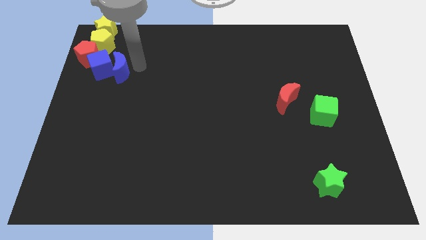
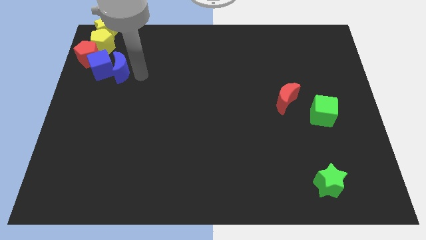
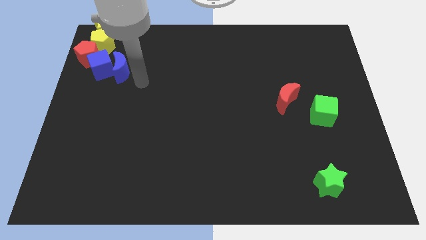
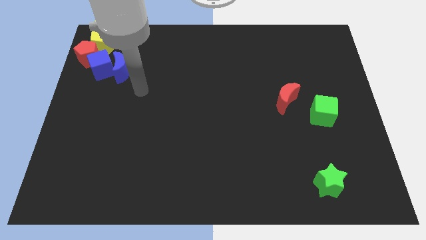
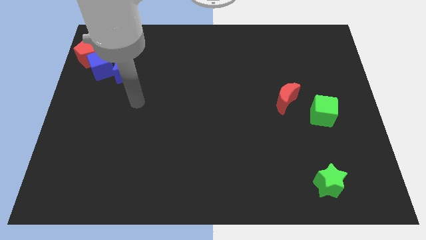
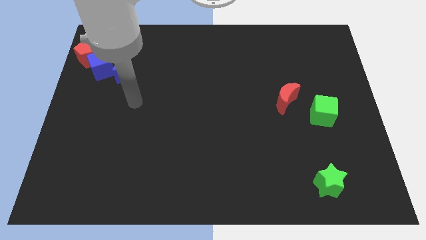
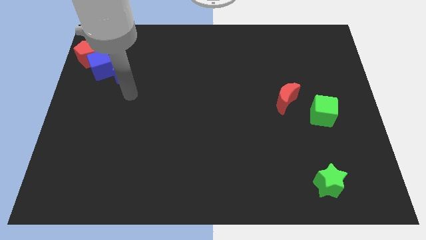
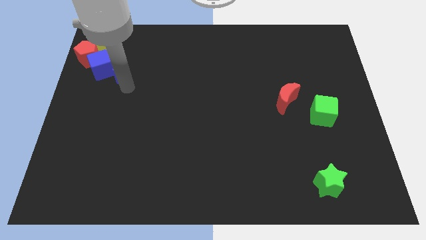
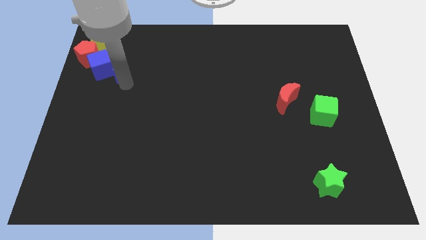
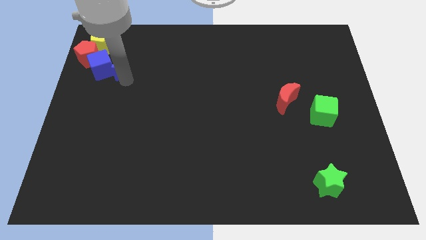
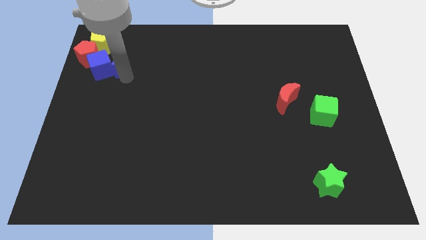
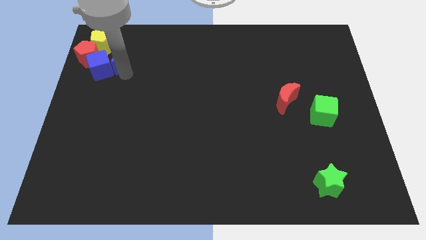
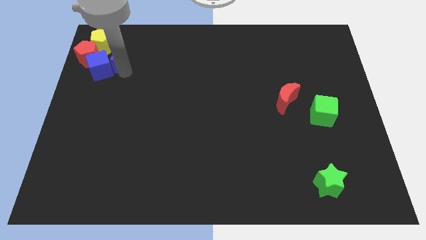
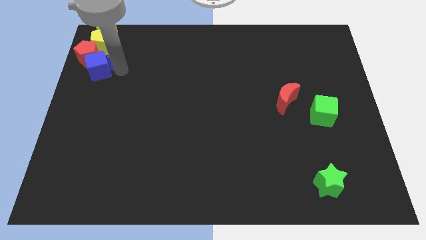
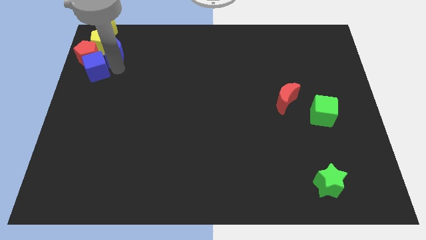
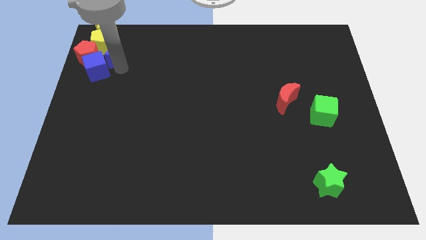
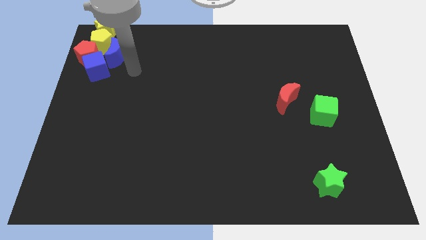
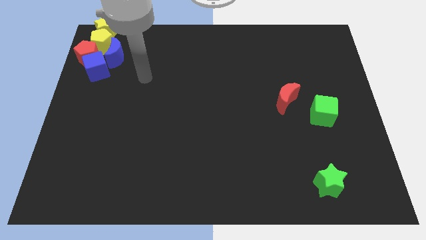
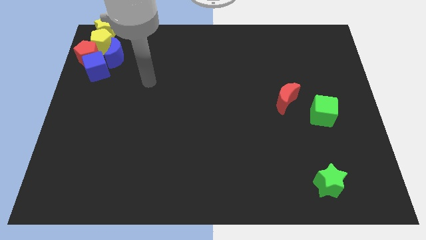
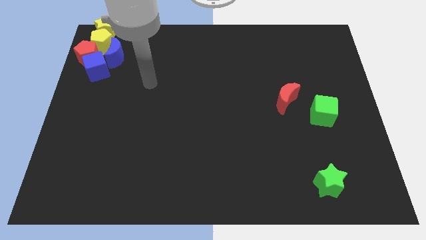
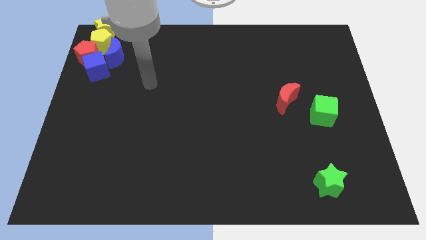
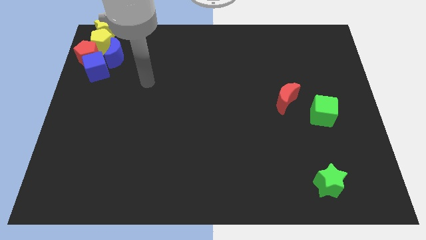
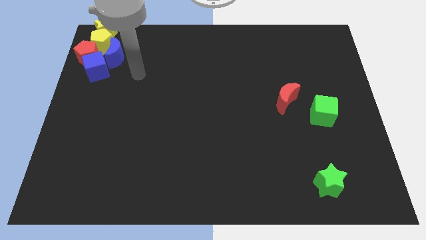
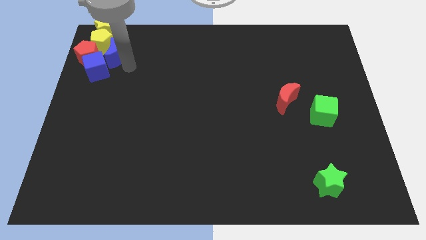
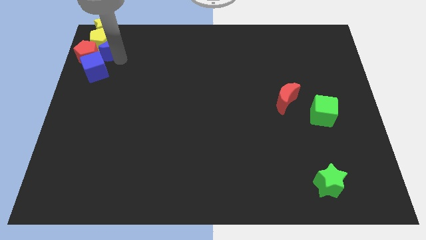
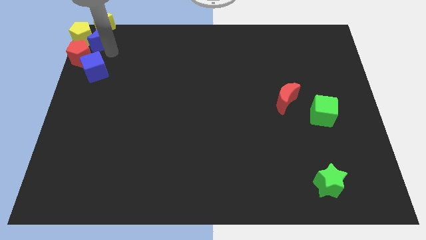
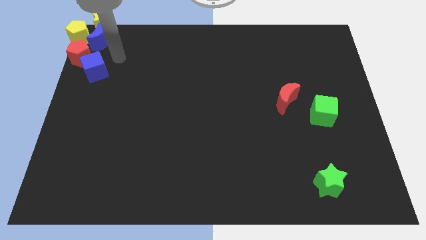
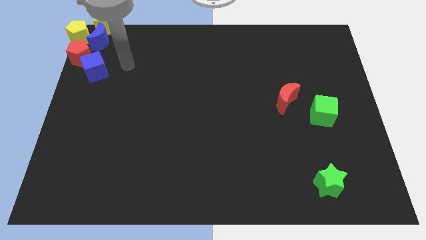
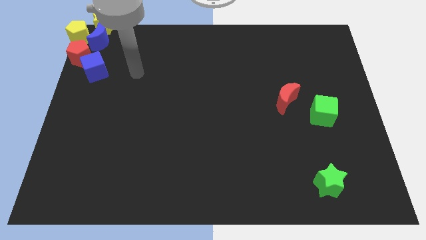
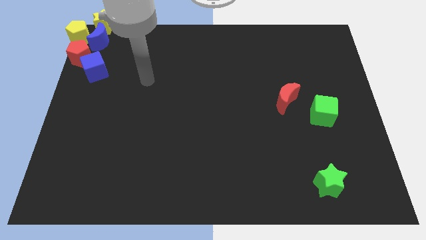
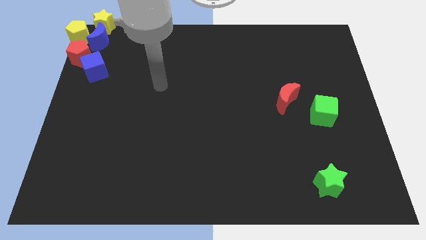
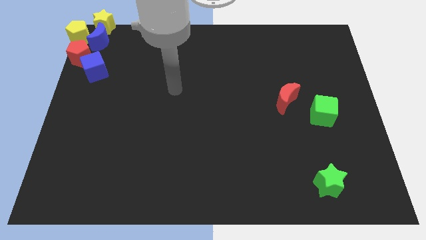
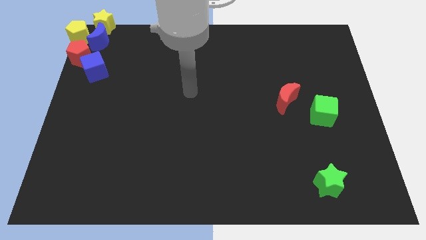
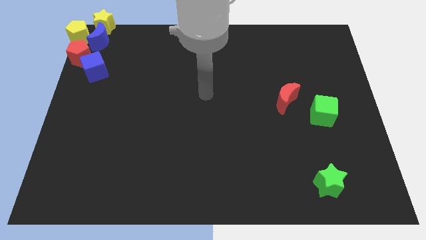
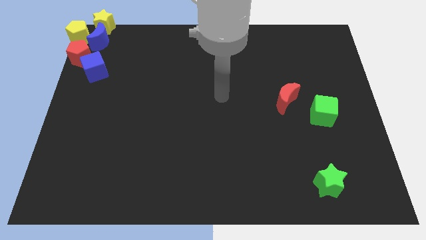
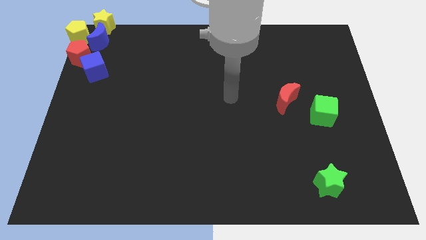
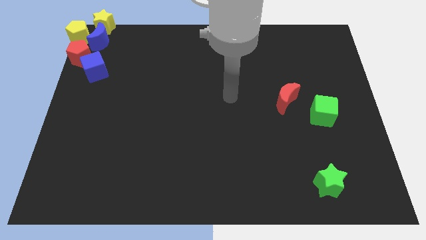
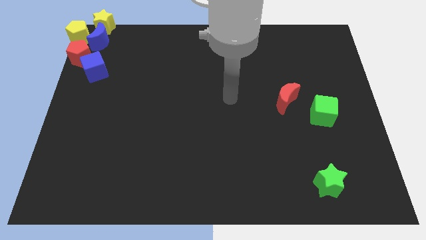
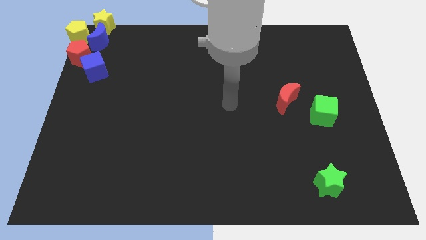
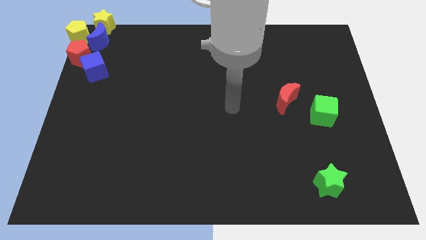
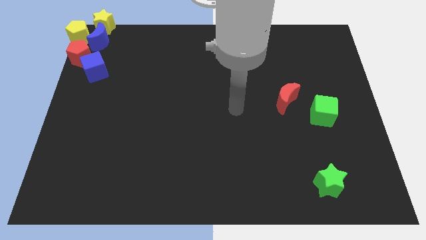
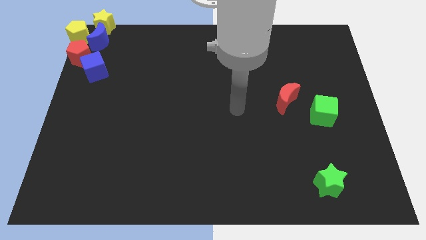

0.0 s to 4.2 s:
move the blue crescent to the right of the yellow pentagon

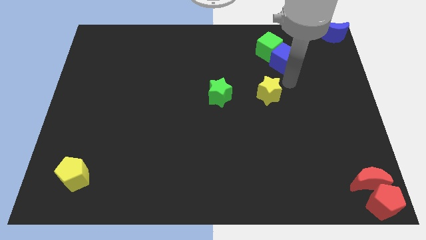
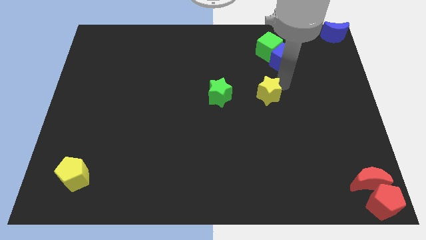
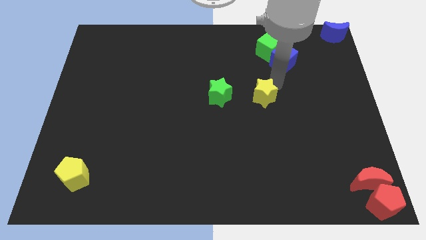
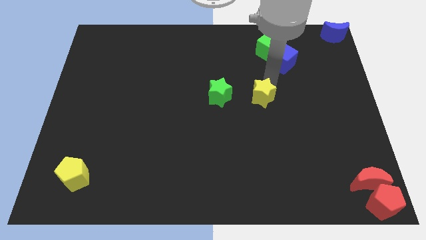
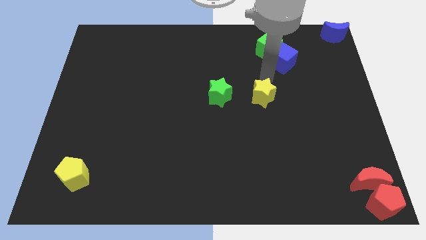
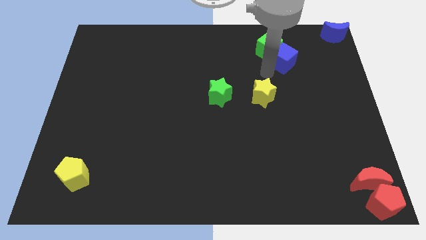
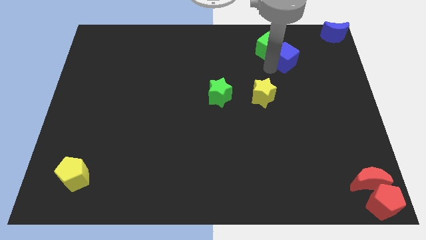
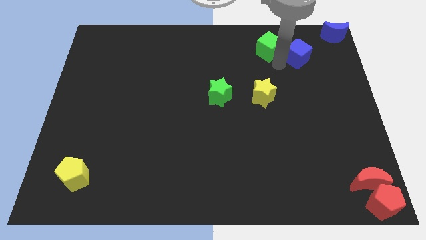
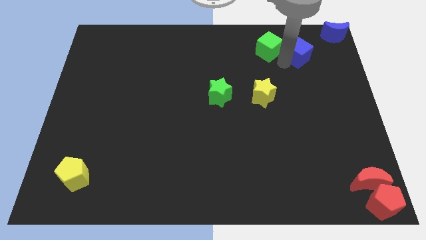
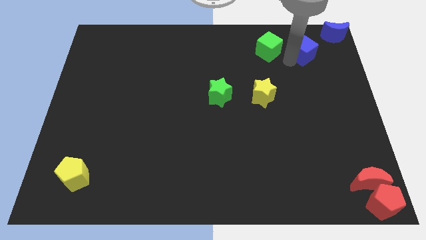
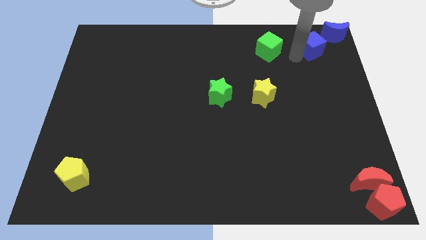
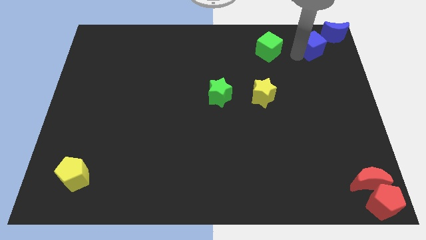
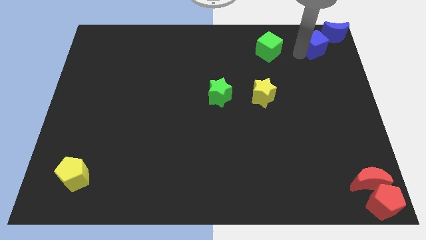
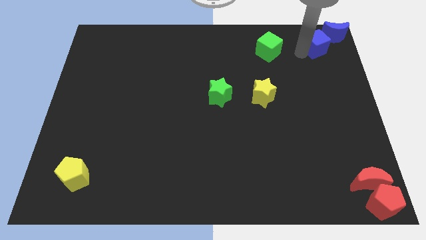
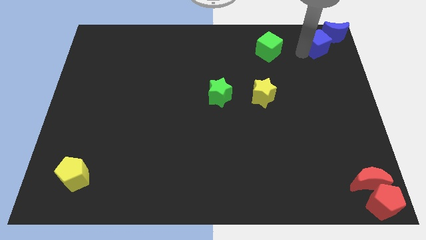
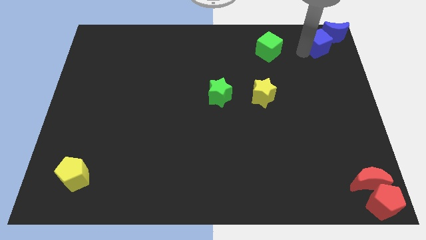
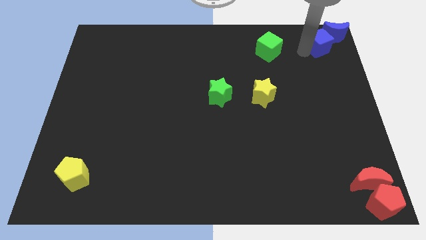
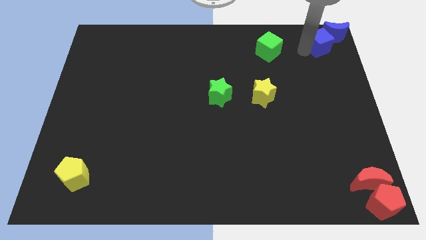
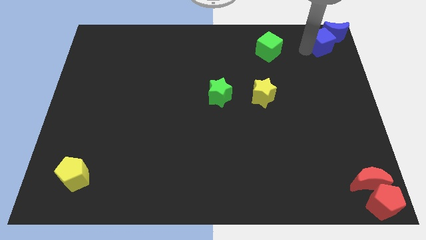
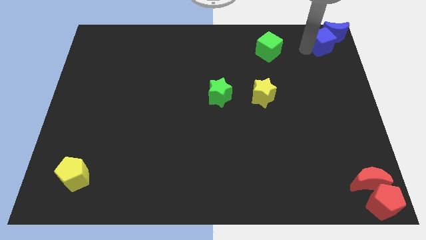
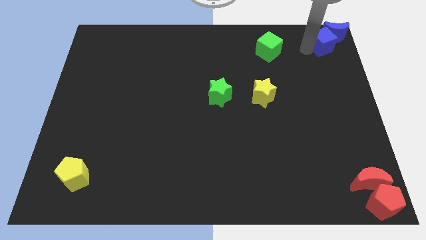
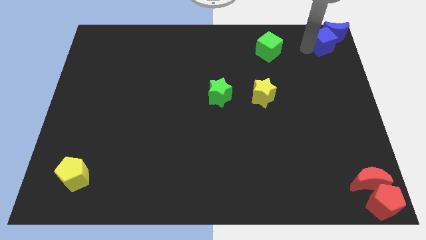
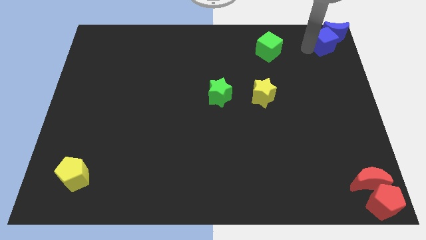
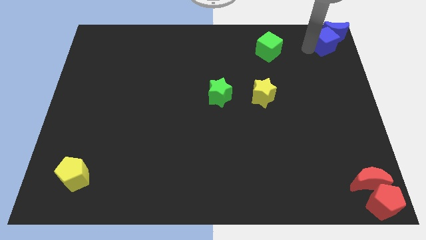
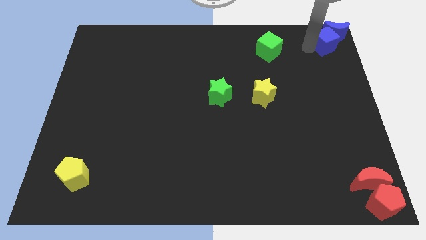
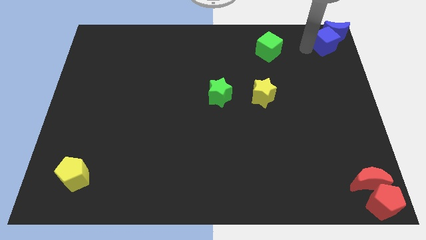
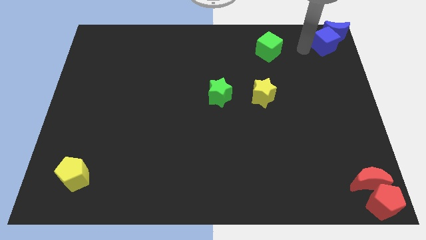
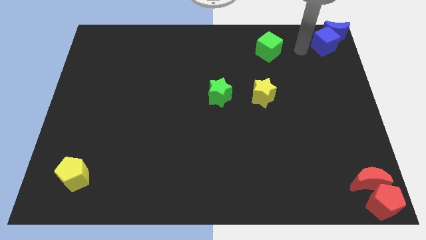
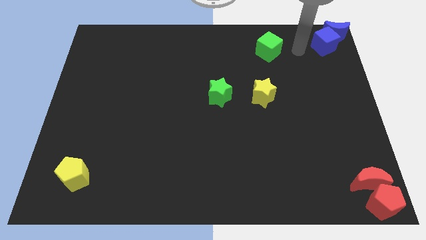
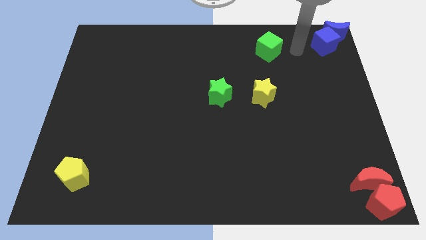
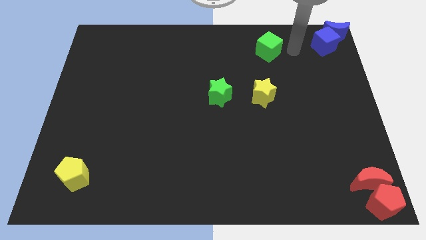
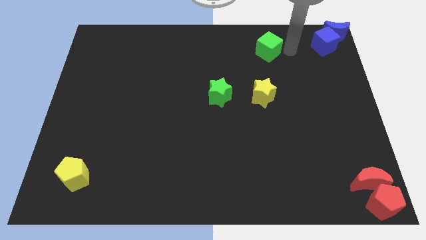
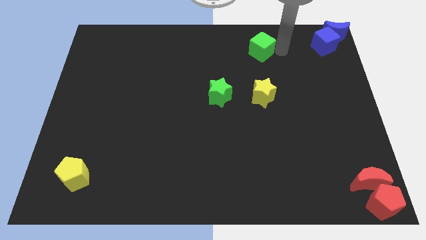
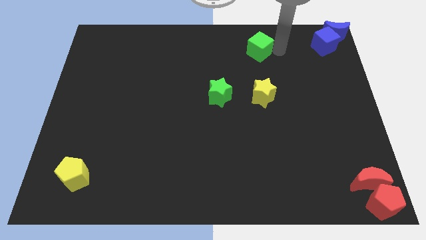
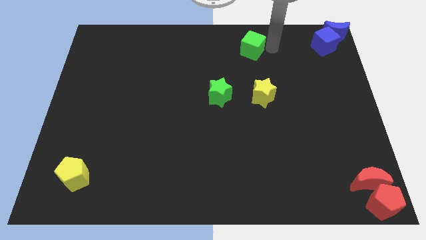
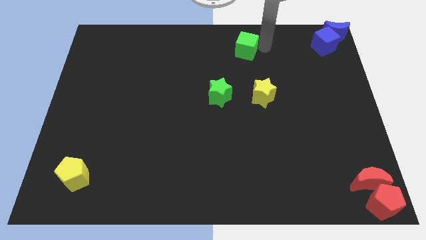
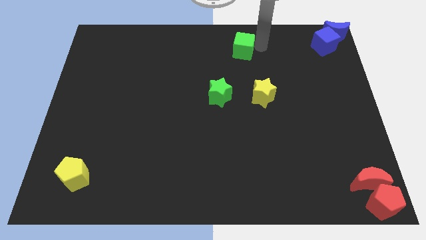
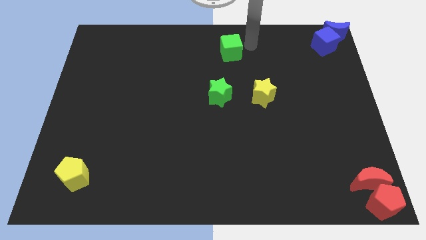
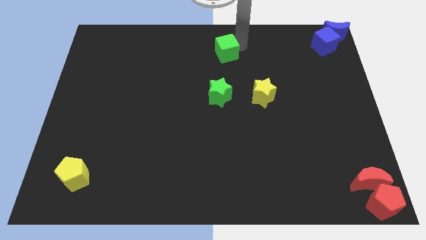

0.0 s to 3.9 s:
separate the green cube and blue cube

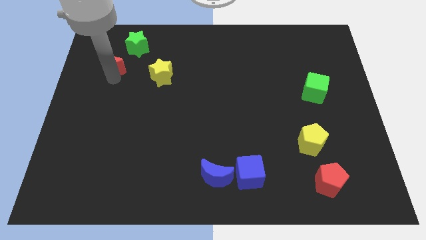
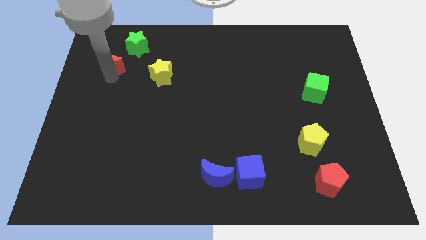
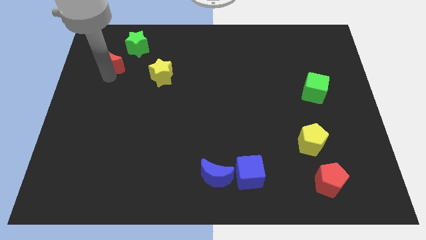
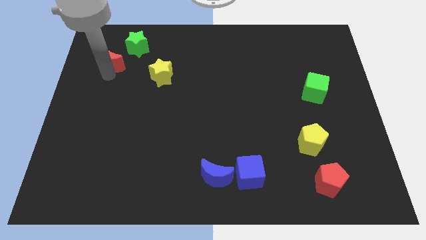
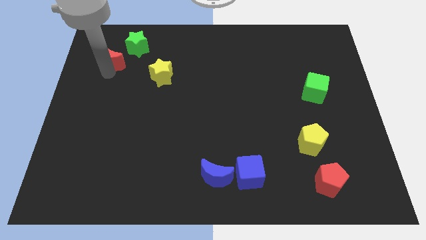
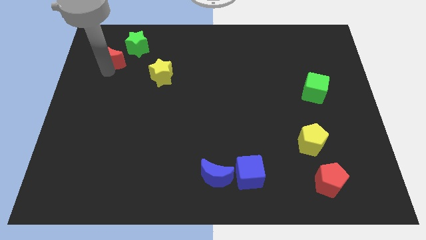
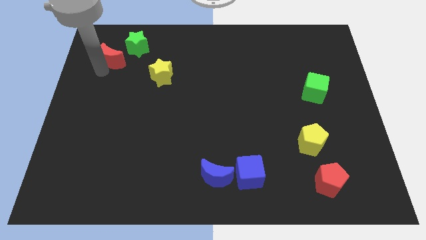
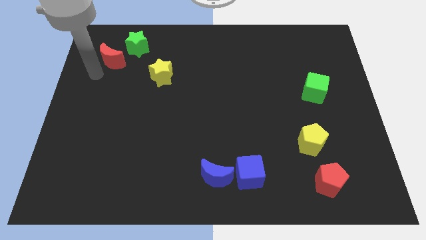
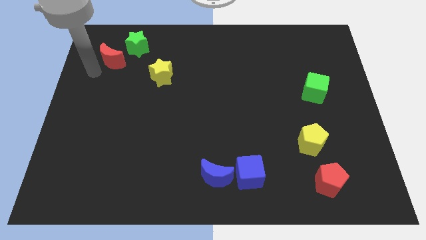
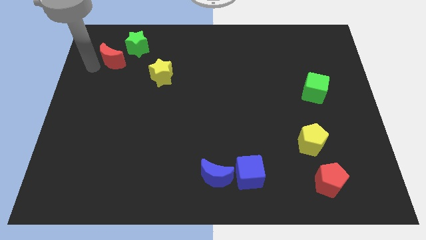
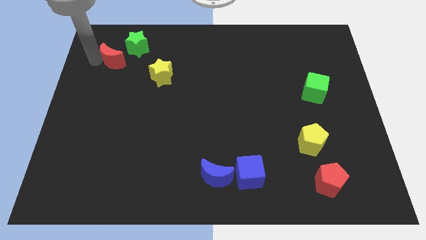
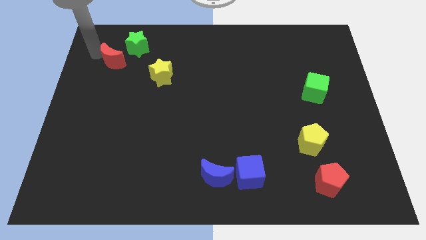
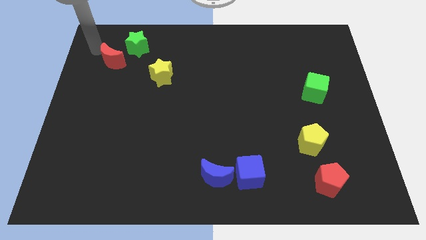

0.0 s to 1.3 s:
move the red crescent left beside the green star
